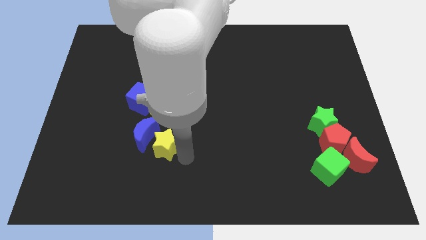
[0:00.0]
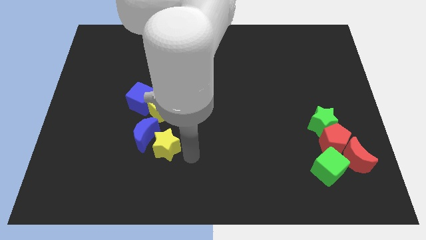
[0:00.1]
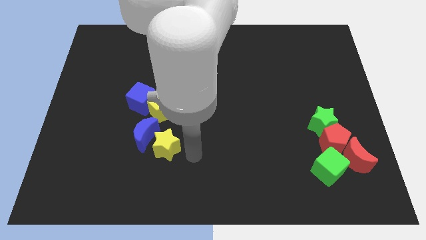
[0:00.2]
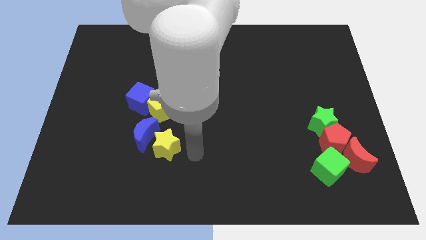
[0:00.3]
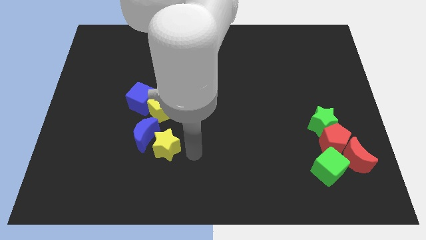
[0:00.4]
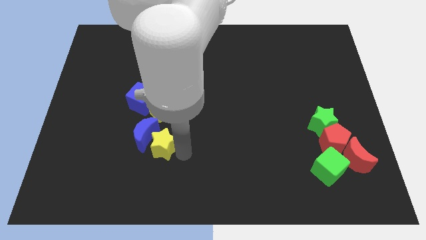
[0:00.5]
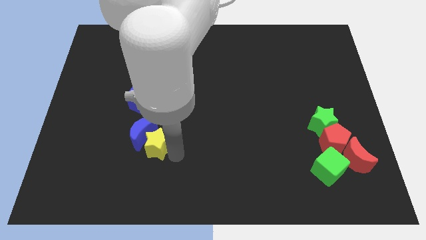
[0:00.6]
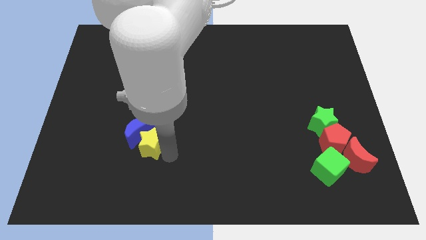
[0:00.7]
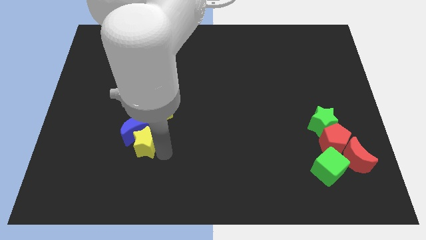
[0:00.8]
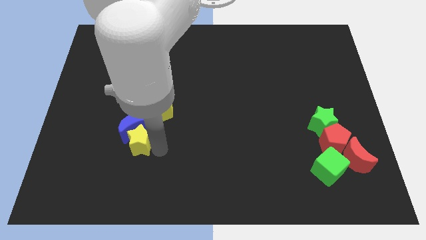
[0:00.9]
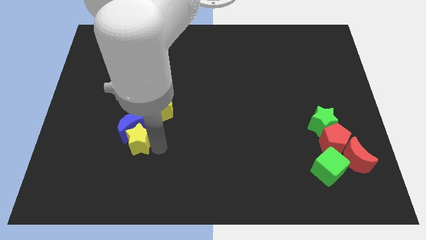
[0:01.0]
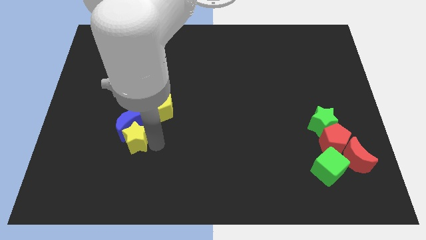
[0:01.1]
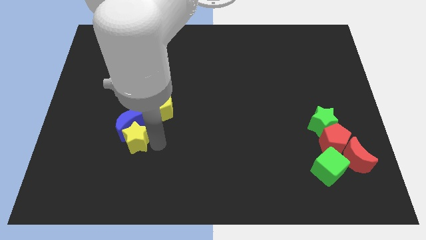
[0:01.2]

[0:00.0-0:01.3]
push group of blocks to the left side

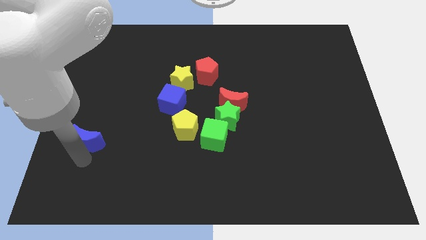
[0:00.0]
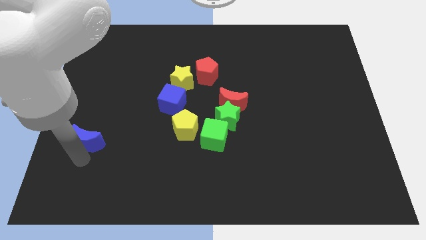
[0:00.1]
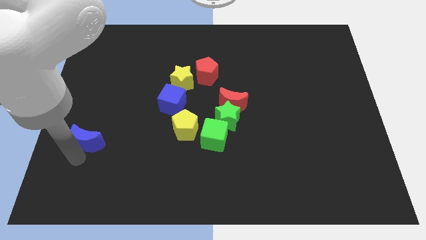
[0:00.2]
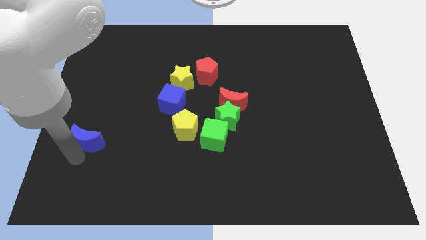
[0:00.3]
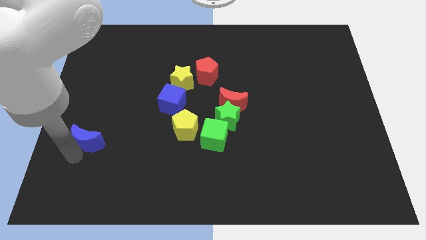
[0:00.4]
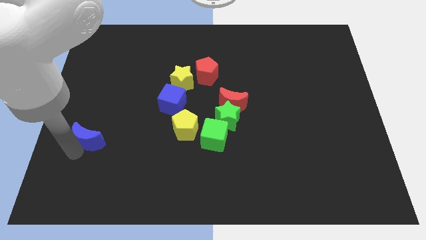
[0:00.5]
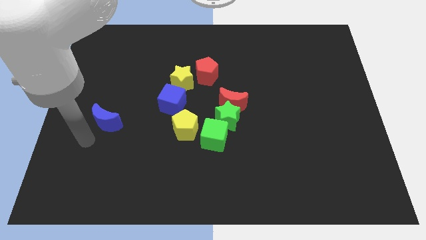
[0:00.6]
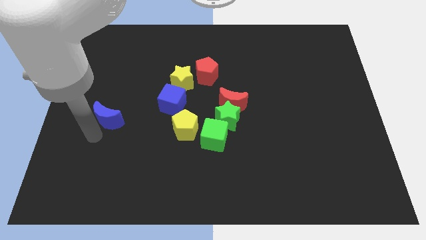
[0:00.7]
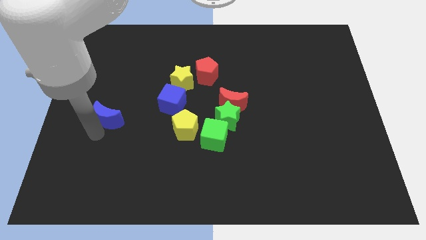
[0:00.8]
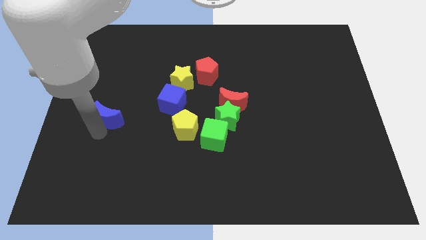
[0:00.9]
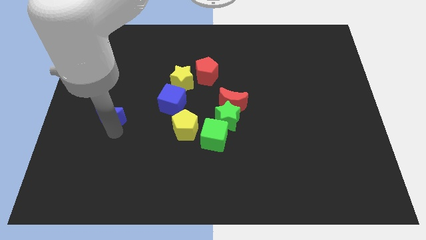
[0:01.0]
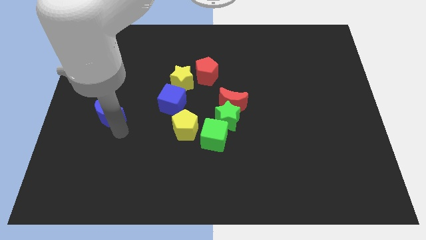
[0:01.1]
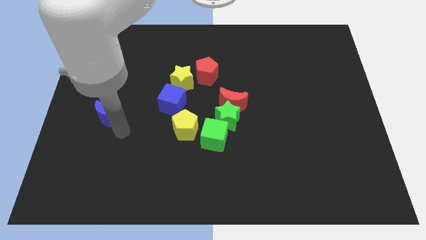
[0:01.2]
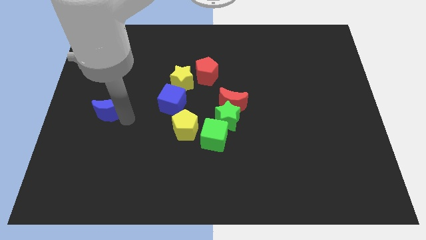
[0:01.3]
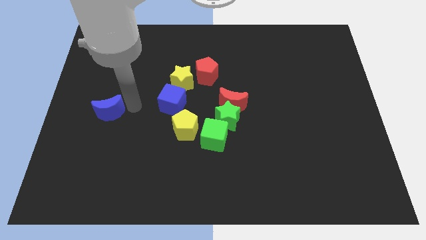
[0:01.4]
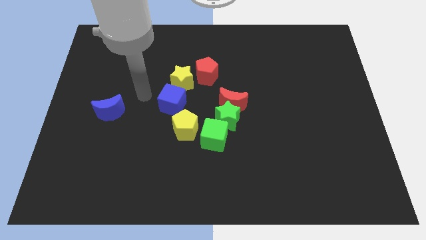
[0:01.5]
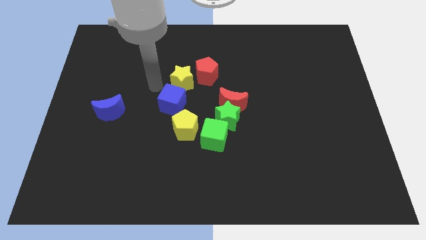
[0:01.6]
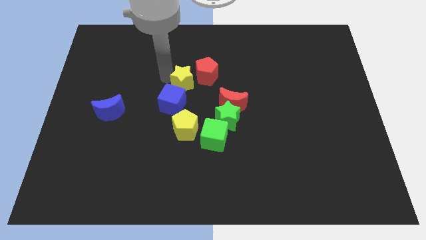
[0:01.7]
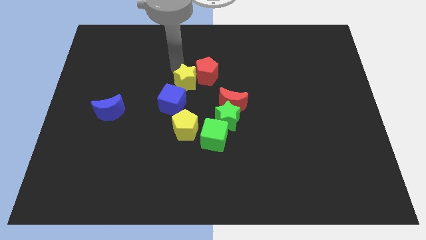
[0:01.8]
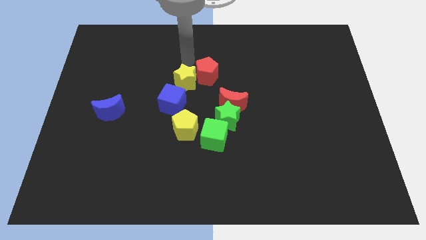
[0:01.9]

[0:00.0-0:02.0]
push blue moon upwards

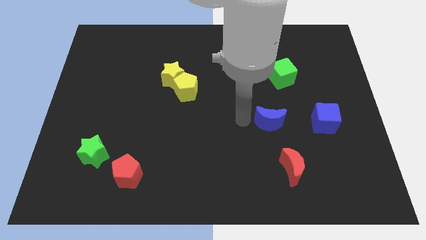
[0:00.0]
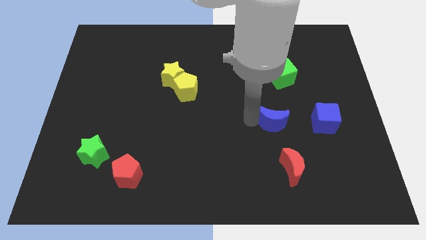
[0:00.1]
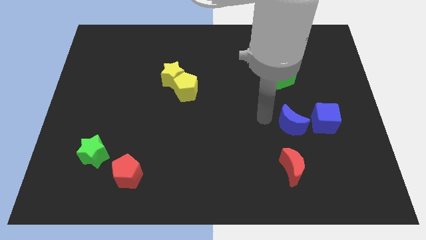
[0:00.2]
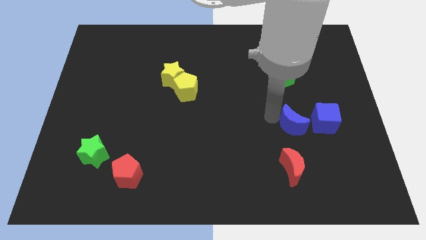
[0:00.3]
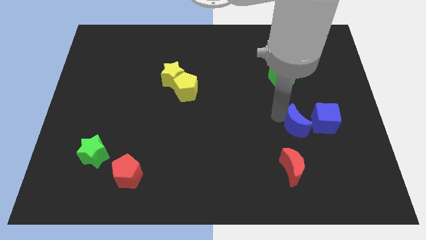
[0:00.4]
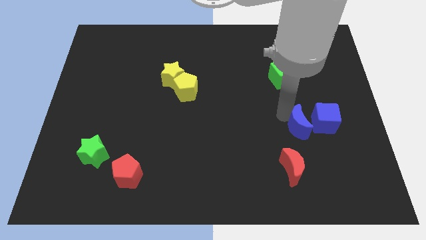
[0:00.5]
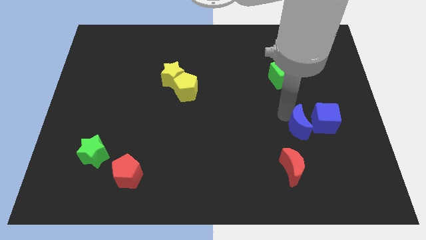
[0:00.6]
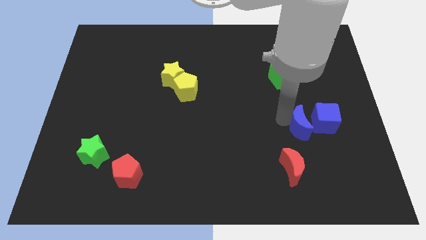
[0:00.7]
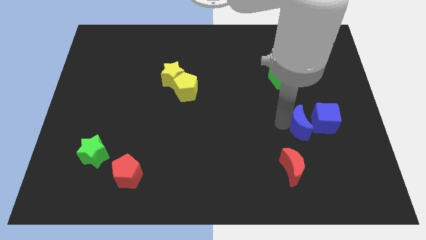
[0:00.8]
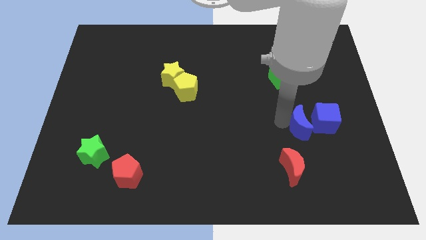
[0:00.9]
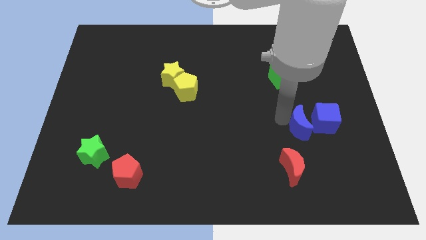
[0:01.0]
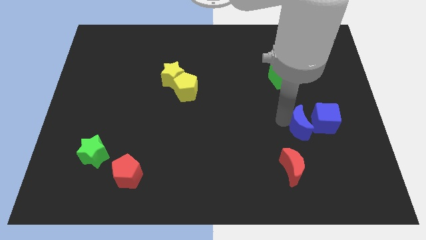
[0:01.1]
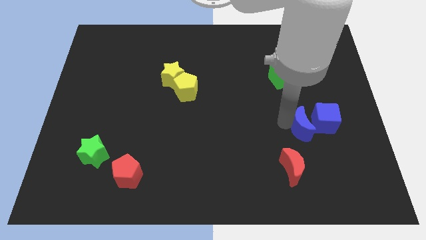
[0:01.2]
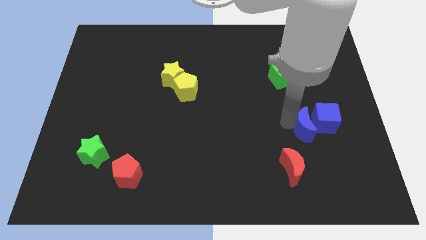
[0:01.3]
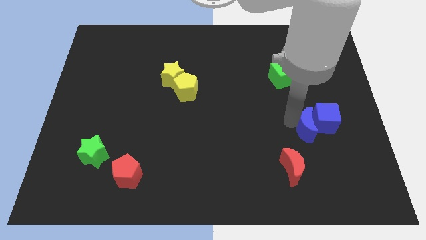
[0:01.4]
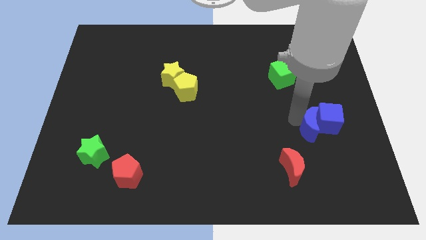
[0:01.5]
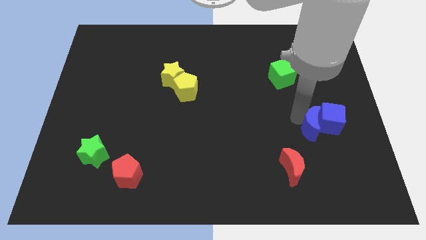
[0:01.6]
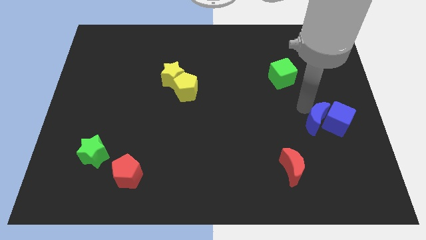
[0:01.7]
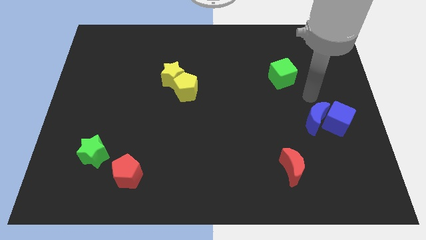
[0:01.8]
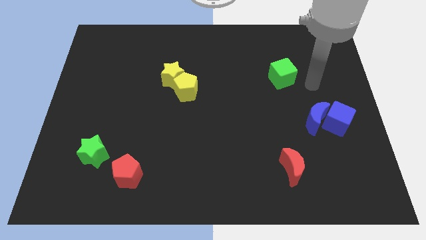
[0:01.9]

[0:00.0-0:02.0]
move the blue crescent into the blue cube

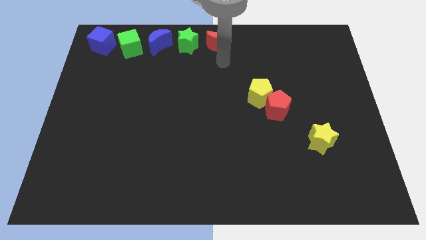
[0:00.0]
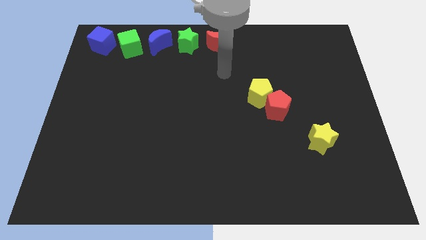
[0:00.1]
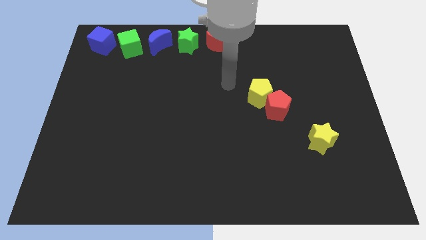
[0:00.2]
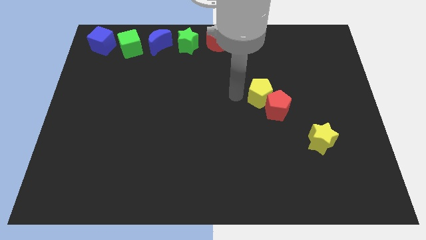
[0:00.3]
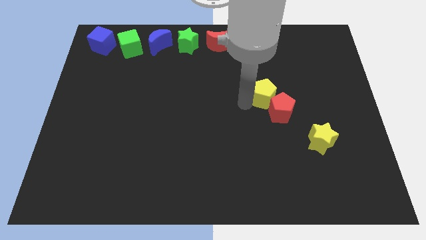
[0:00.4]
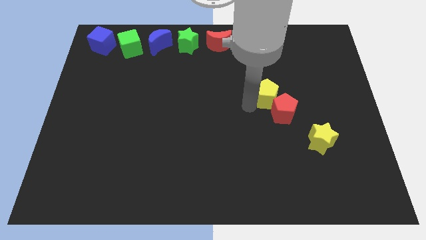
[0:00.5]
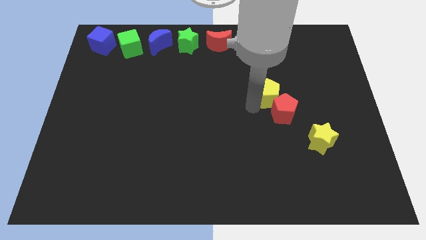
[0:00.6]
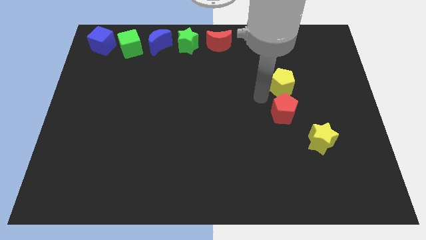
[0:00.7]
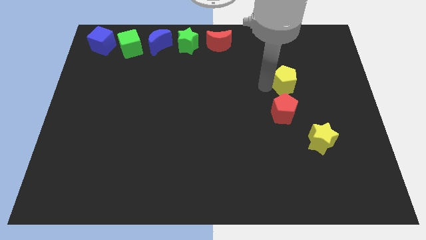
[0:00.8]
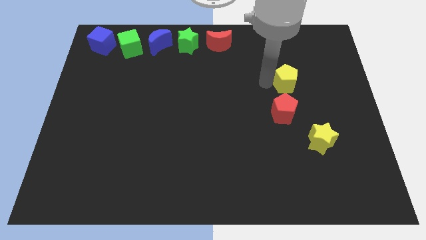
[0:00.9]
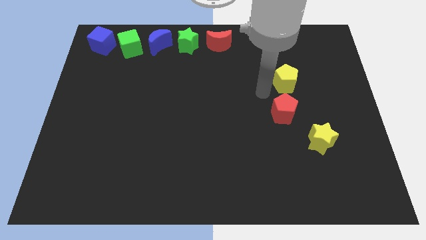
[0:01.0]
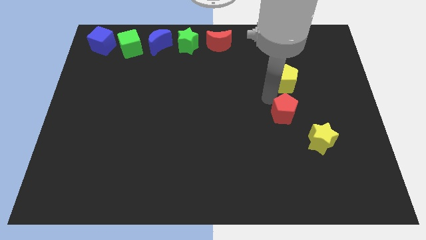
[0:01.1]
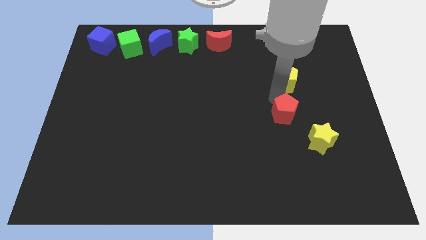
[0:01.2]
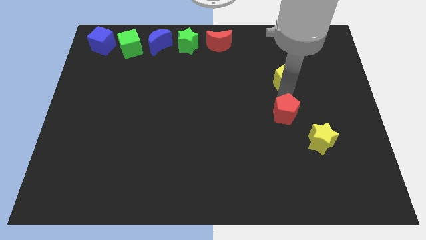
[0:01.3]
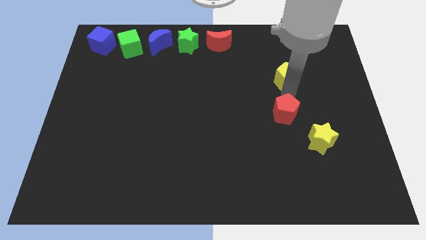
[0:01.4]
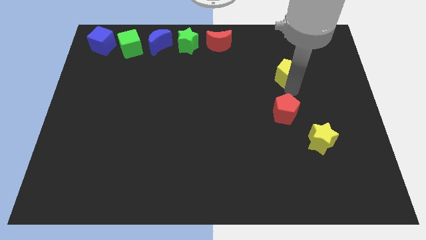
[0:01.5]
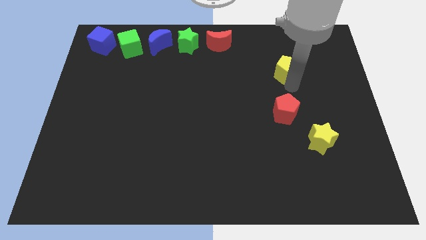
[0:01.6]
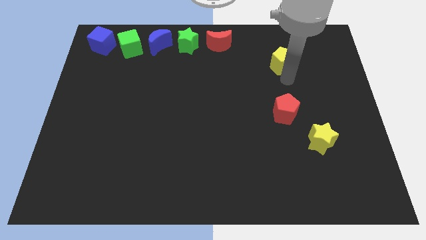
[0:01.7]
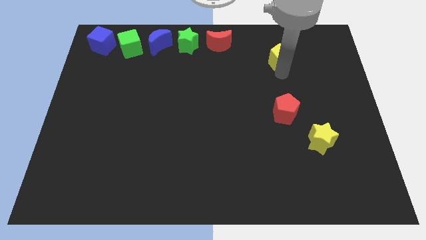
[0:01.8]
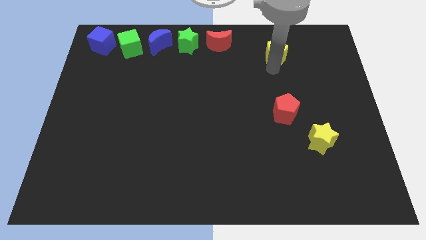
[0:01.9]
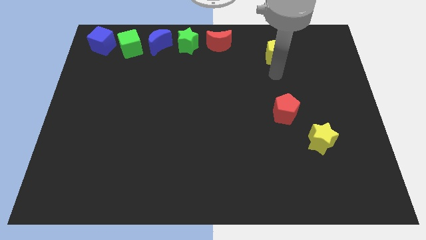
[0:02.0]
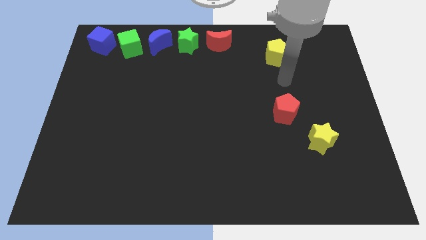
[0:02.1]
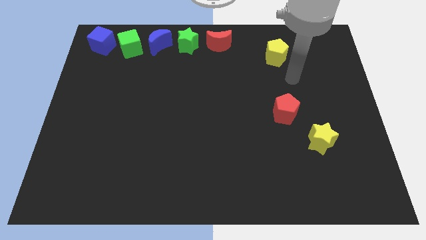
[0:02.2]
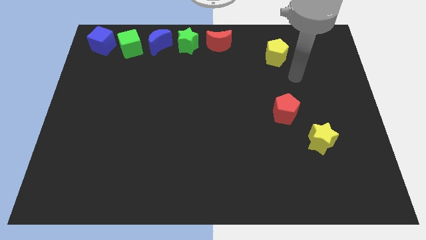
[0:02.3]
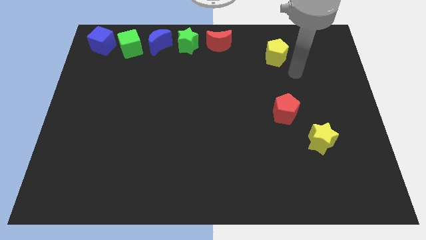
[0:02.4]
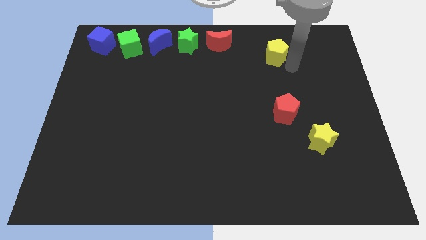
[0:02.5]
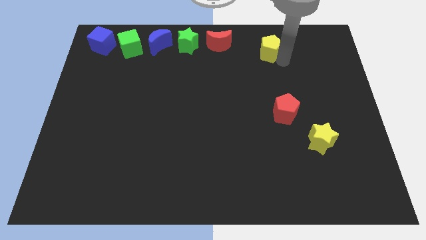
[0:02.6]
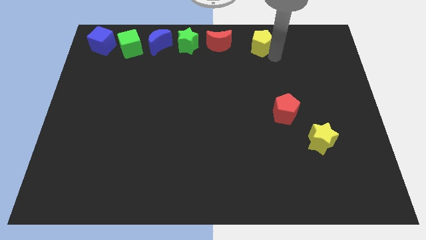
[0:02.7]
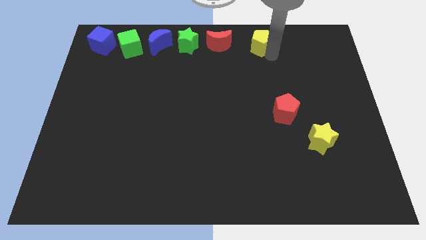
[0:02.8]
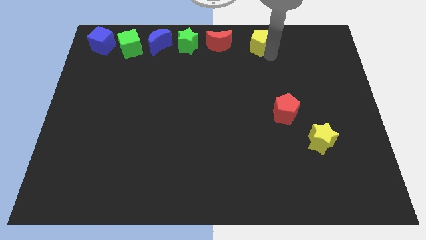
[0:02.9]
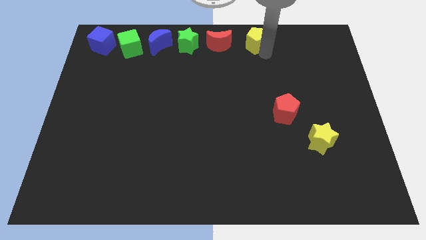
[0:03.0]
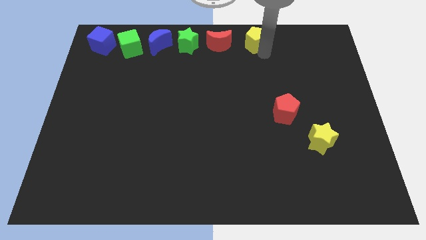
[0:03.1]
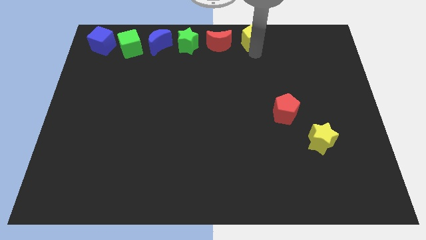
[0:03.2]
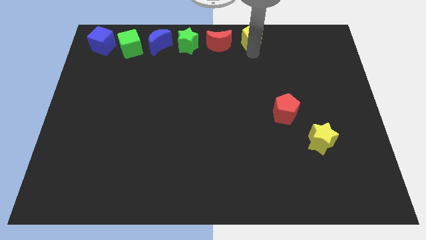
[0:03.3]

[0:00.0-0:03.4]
place yellow pentagon beside red moon

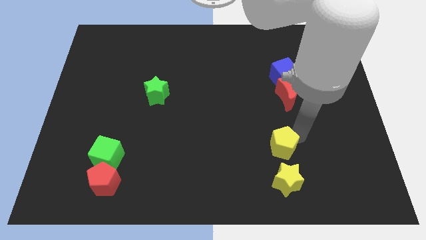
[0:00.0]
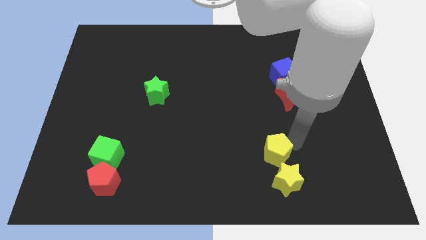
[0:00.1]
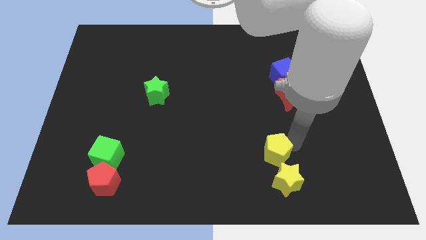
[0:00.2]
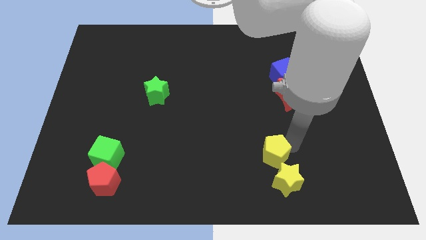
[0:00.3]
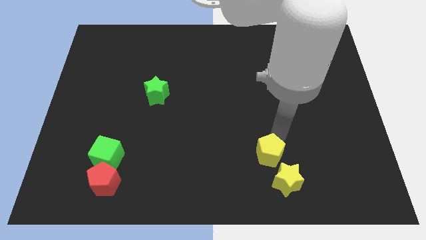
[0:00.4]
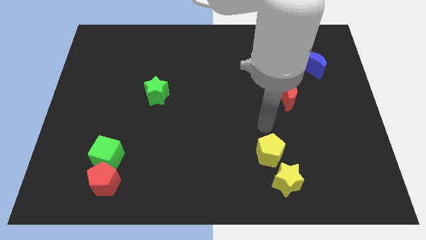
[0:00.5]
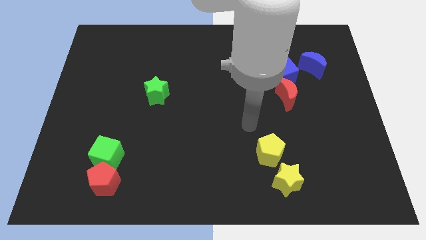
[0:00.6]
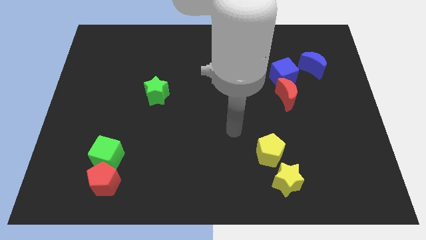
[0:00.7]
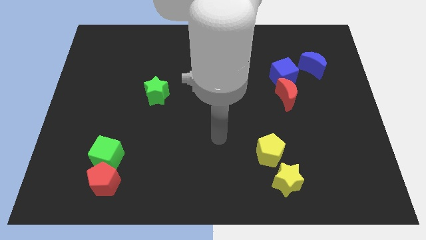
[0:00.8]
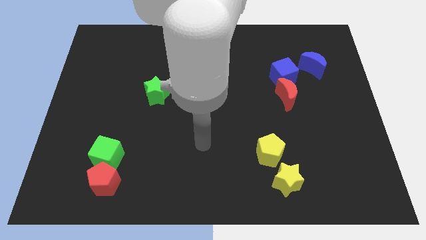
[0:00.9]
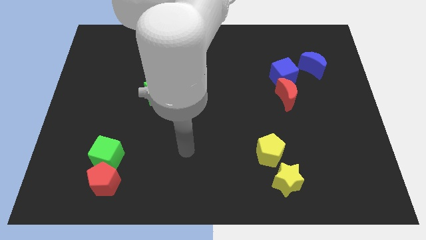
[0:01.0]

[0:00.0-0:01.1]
push yellow pentagon close to yellow star
